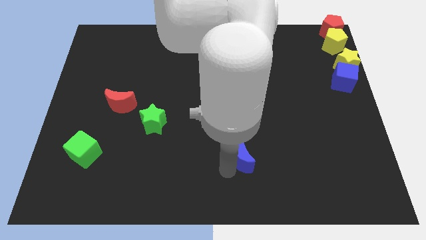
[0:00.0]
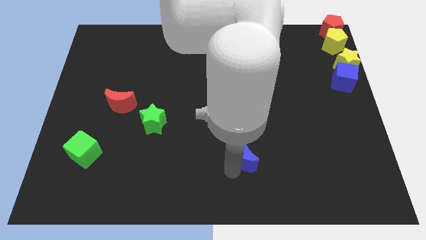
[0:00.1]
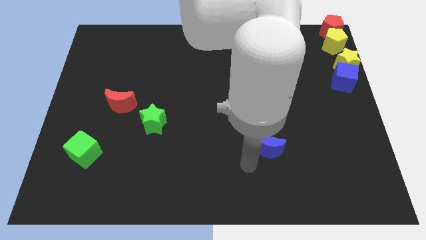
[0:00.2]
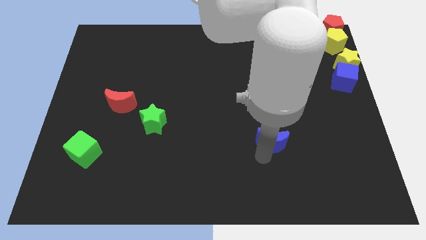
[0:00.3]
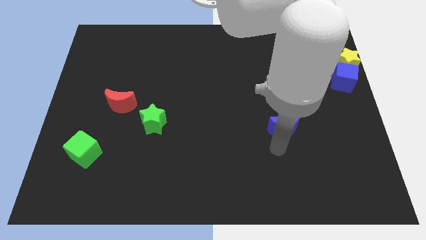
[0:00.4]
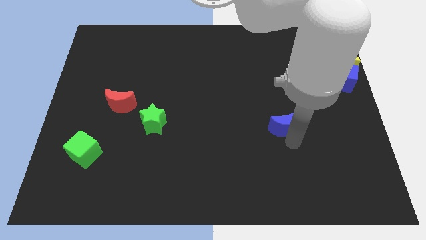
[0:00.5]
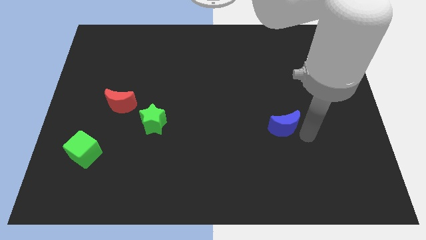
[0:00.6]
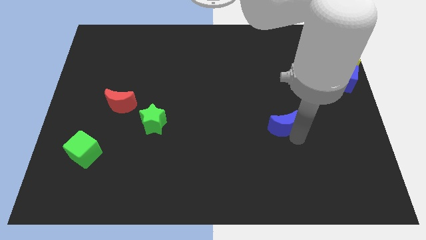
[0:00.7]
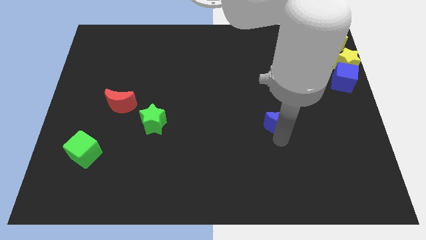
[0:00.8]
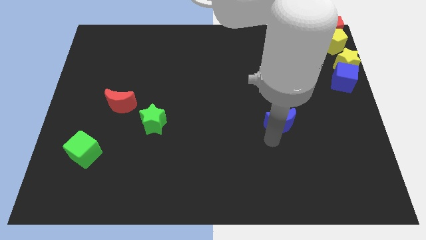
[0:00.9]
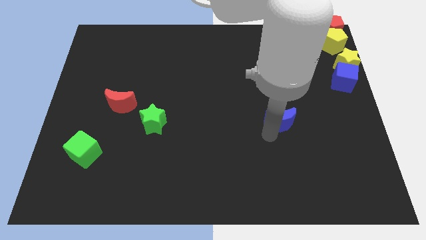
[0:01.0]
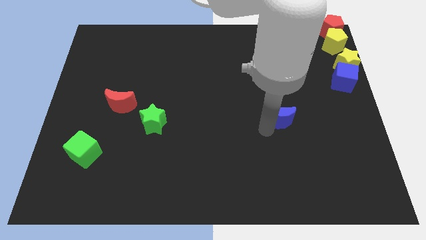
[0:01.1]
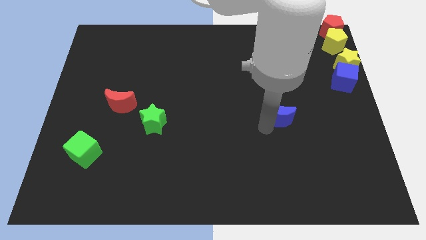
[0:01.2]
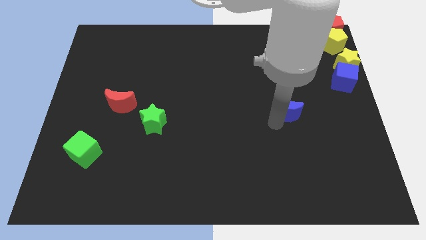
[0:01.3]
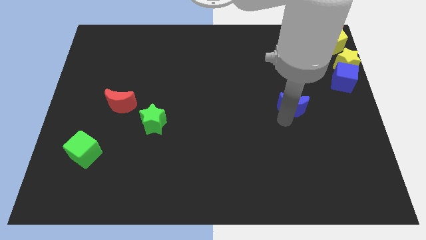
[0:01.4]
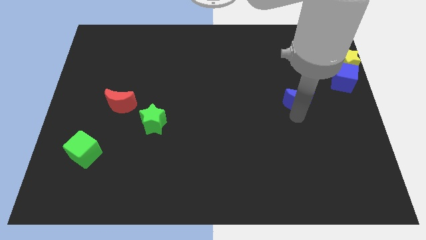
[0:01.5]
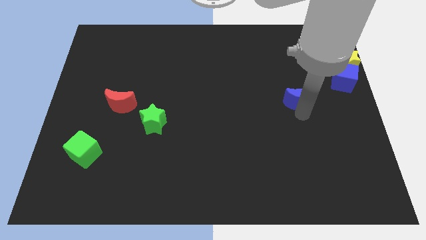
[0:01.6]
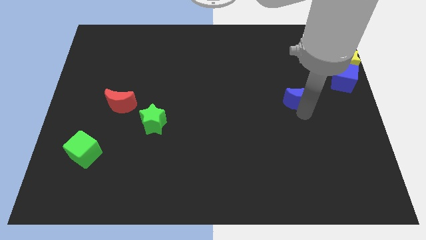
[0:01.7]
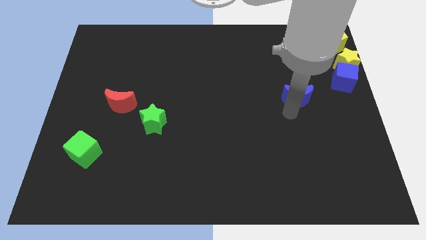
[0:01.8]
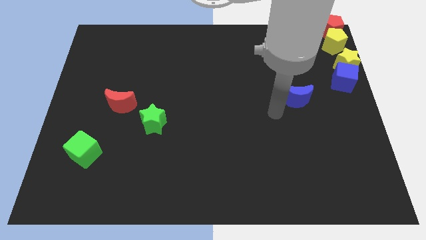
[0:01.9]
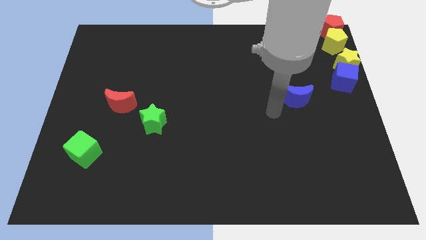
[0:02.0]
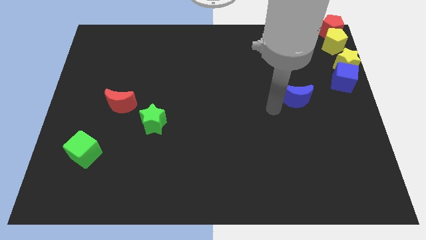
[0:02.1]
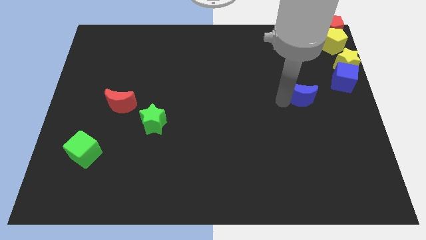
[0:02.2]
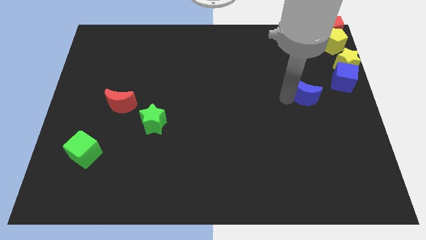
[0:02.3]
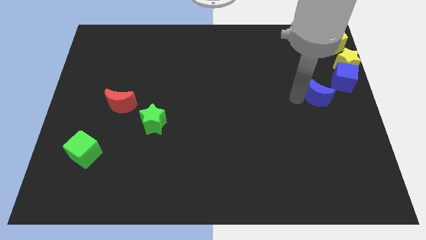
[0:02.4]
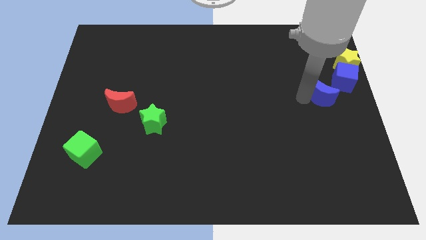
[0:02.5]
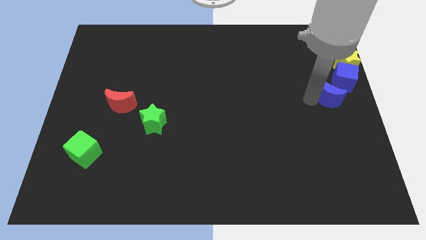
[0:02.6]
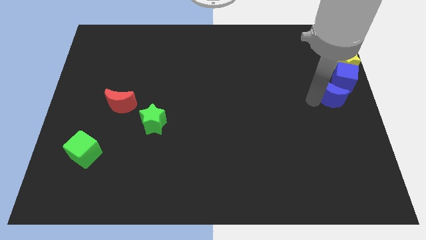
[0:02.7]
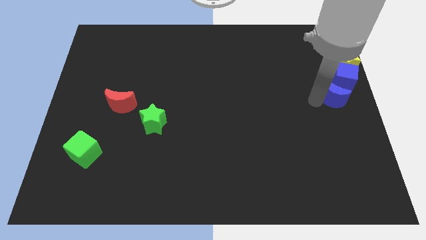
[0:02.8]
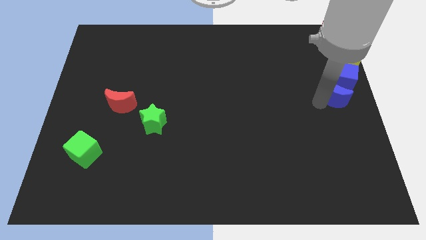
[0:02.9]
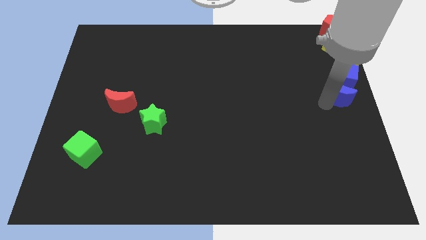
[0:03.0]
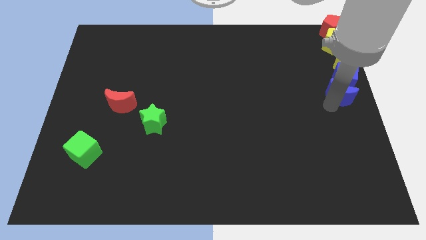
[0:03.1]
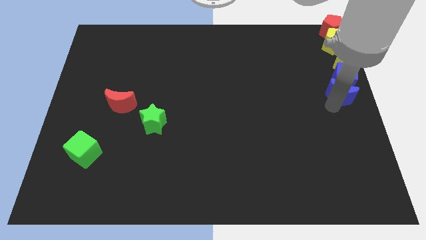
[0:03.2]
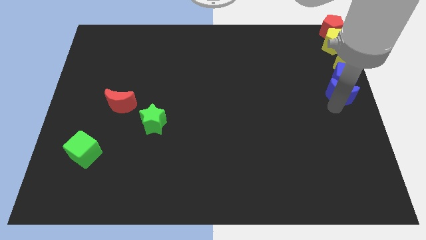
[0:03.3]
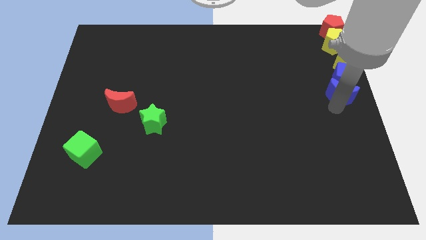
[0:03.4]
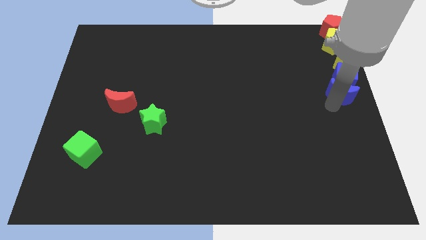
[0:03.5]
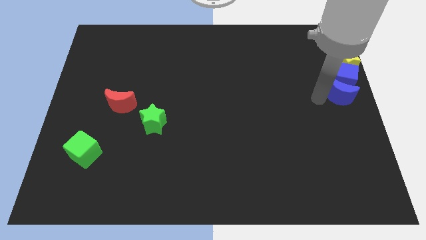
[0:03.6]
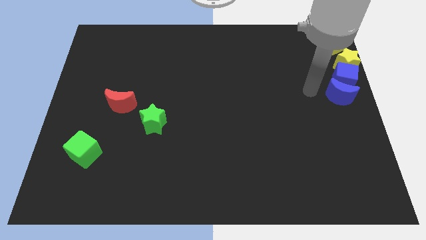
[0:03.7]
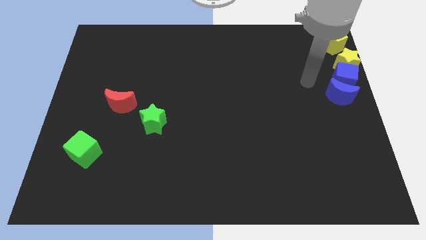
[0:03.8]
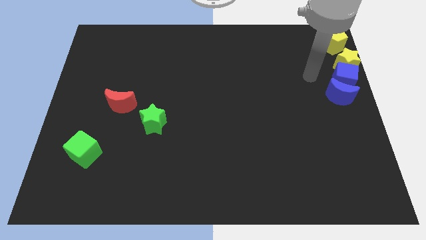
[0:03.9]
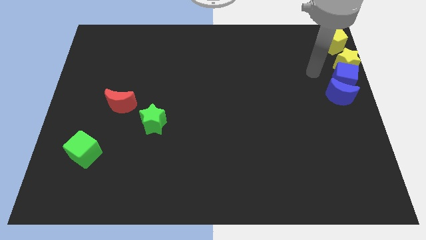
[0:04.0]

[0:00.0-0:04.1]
place the blue crescent to the bottom side of the blue cube

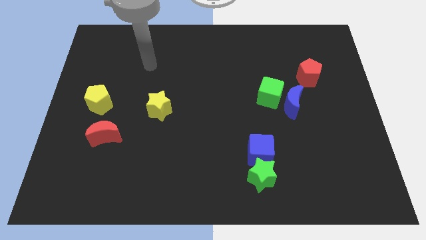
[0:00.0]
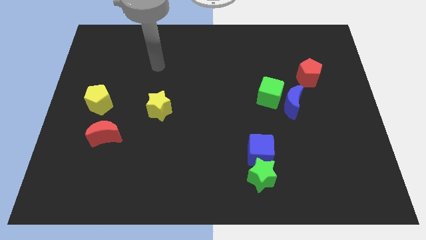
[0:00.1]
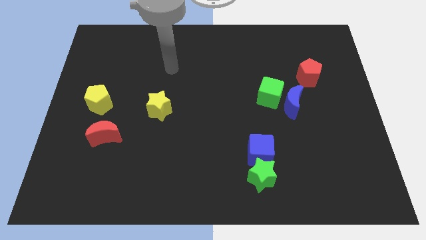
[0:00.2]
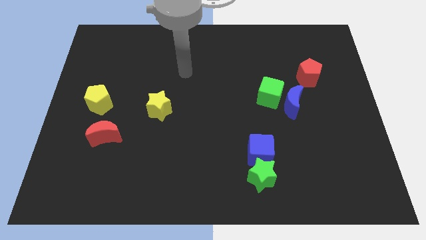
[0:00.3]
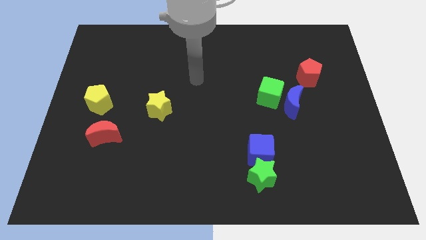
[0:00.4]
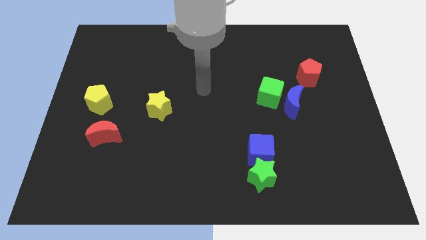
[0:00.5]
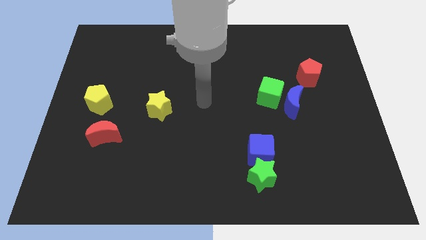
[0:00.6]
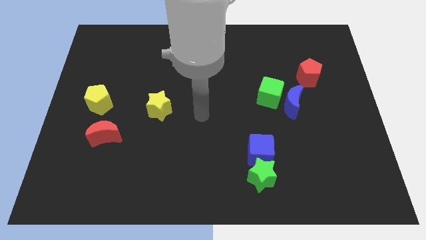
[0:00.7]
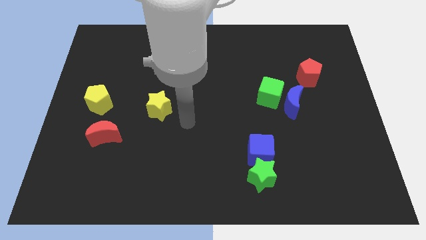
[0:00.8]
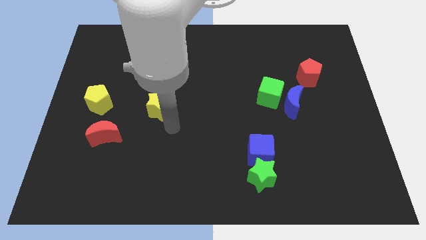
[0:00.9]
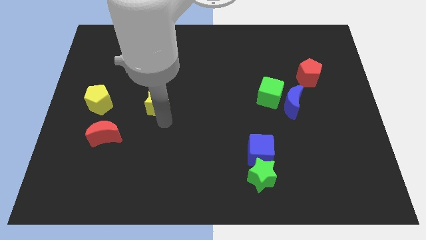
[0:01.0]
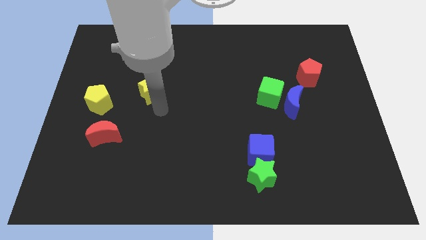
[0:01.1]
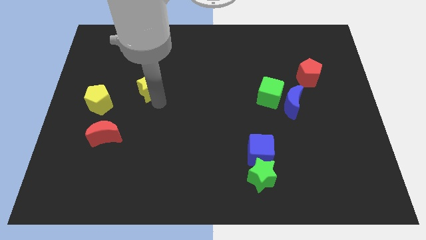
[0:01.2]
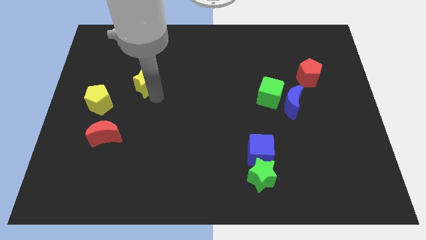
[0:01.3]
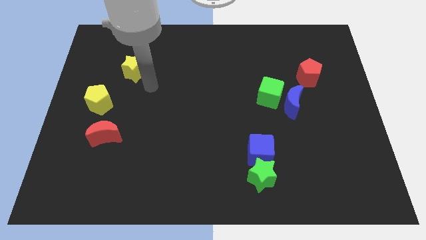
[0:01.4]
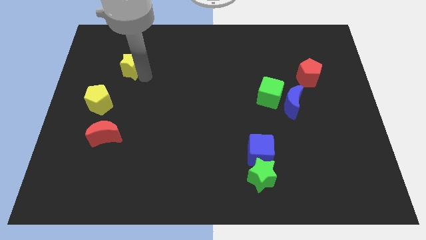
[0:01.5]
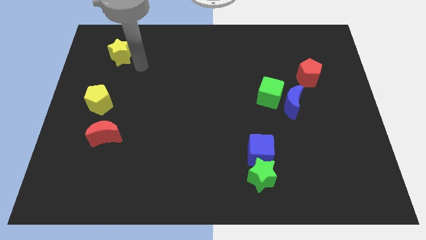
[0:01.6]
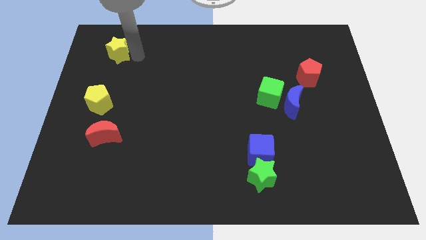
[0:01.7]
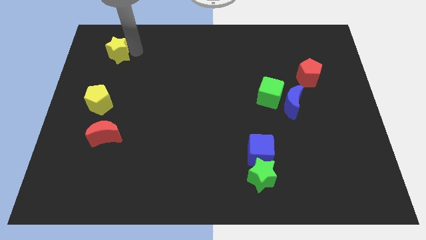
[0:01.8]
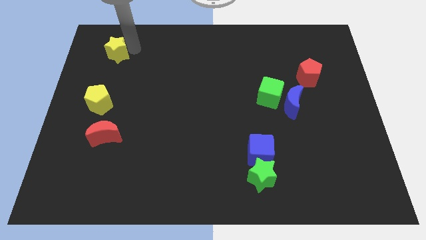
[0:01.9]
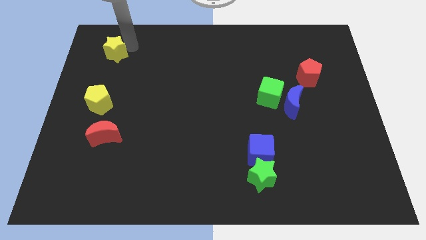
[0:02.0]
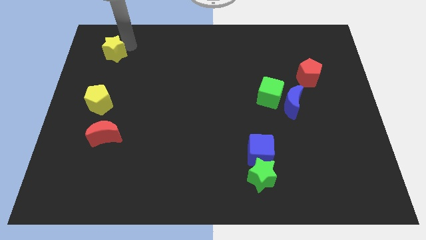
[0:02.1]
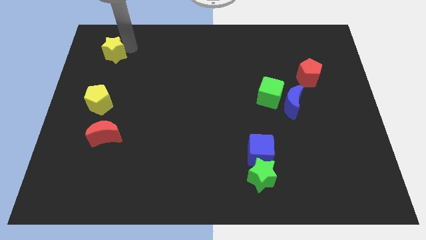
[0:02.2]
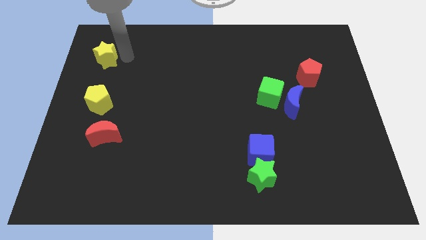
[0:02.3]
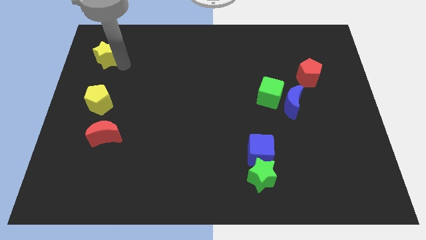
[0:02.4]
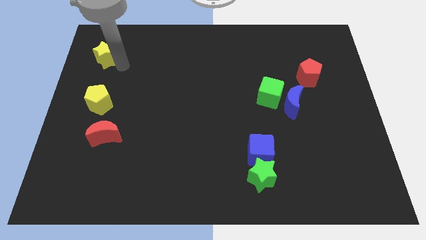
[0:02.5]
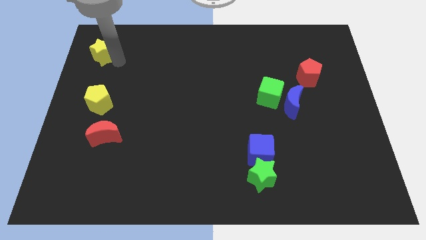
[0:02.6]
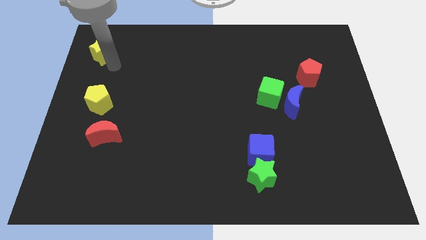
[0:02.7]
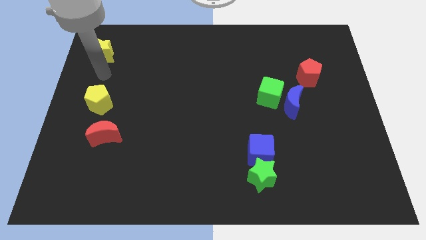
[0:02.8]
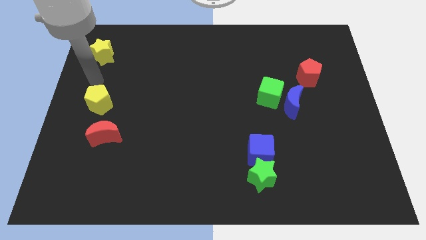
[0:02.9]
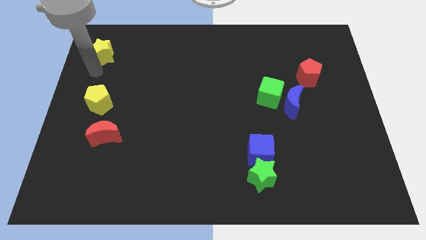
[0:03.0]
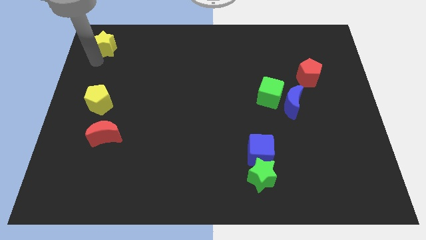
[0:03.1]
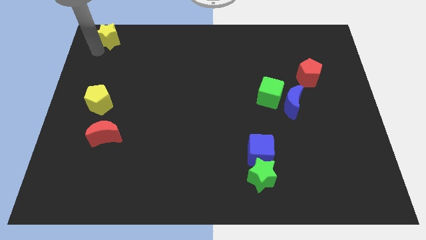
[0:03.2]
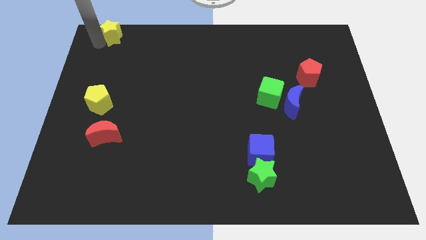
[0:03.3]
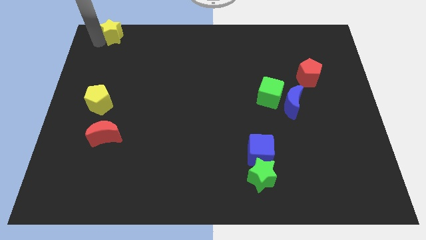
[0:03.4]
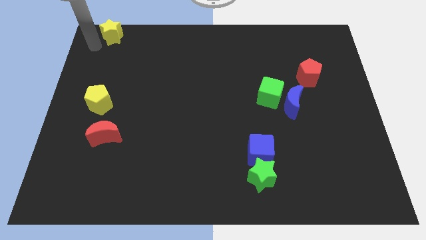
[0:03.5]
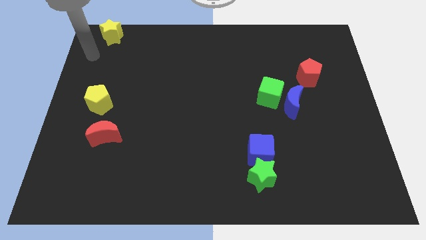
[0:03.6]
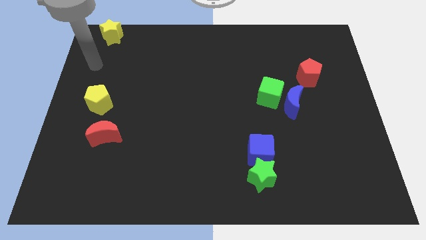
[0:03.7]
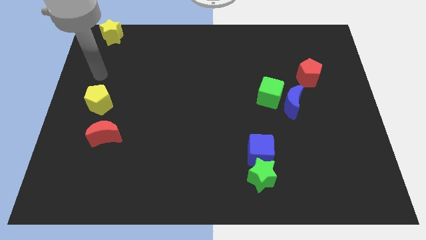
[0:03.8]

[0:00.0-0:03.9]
place the yellow star vertically on the top side of the yellow pentagon

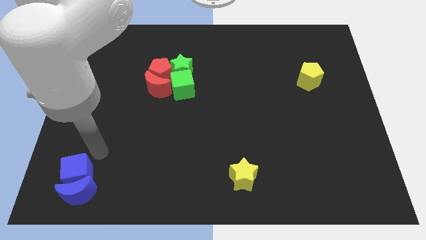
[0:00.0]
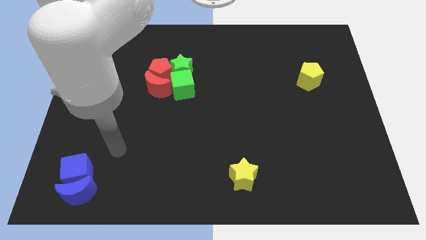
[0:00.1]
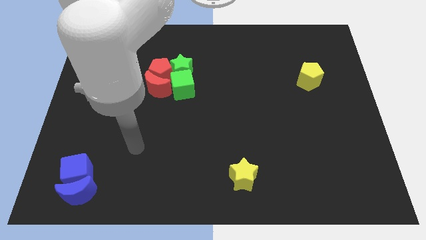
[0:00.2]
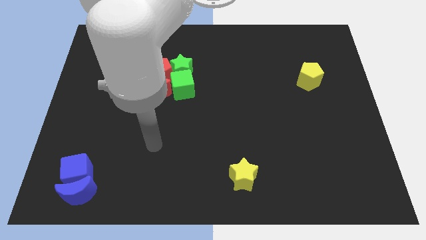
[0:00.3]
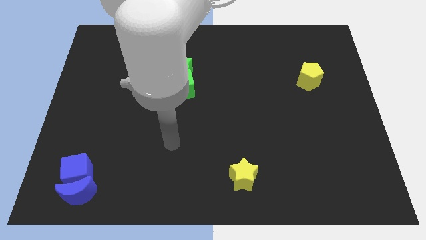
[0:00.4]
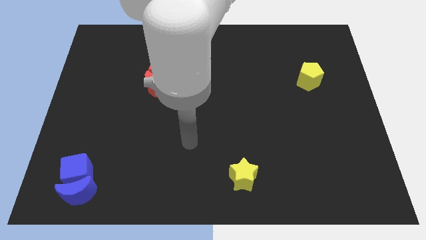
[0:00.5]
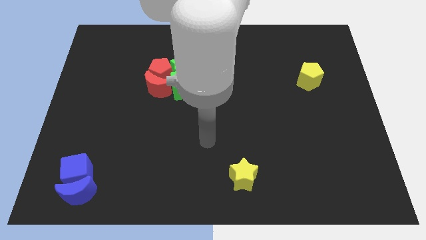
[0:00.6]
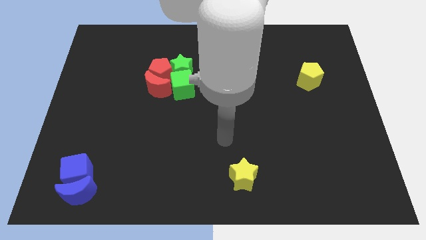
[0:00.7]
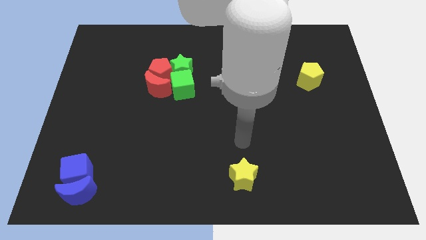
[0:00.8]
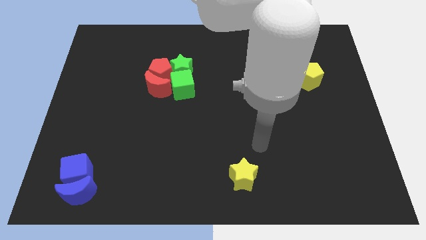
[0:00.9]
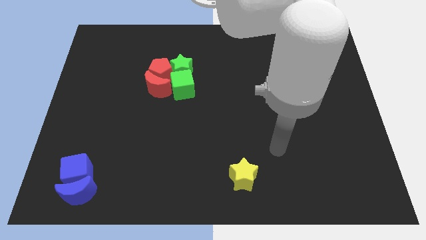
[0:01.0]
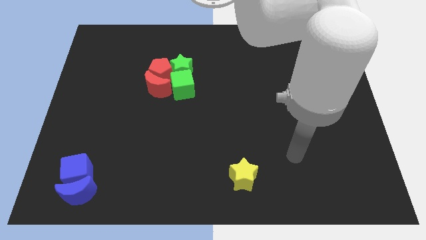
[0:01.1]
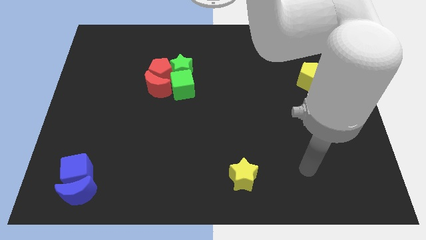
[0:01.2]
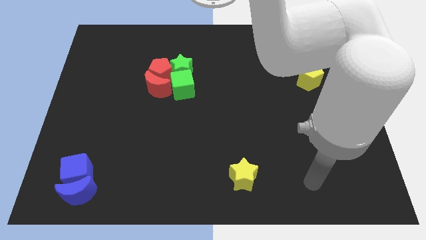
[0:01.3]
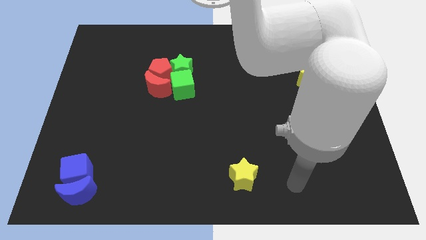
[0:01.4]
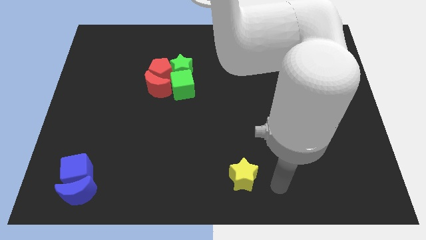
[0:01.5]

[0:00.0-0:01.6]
place your arm at the right side of the yellow star
